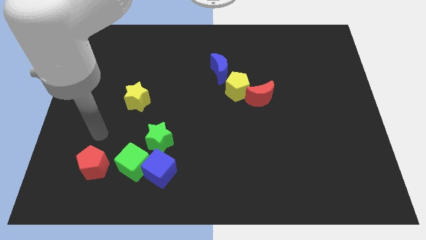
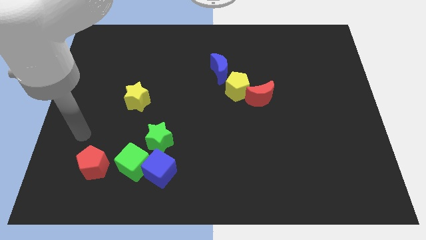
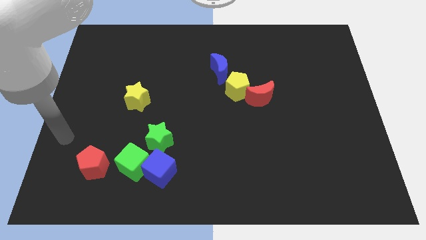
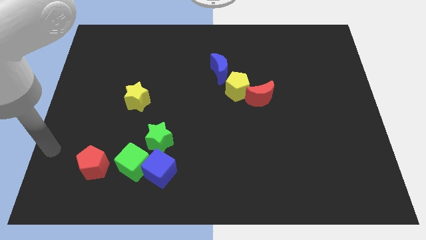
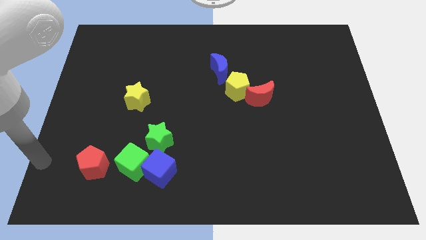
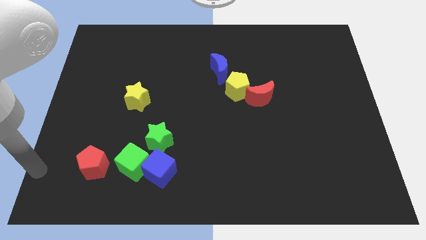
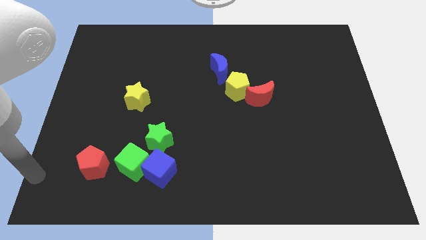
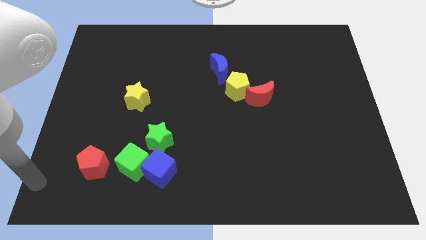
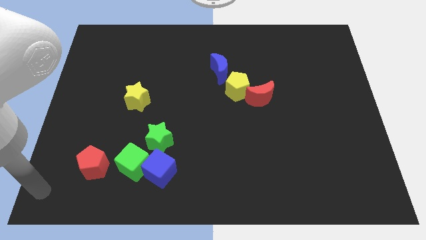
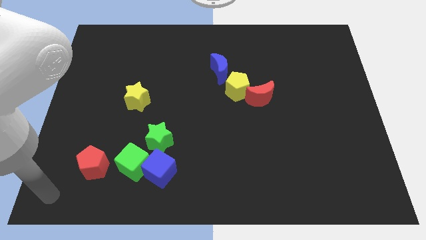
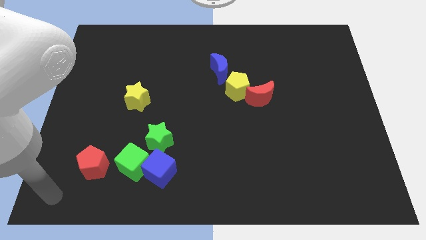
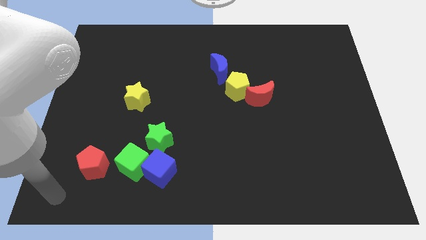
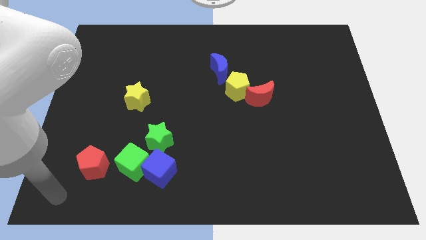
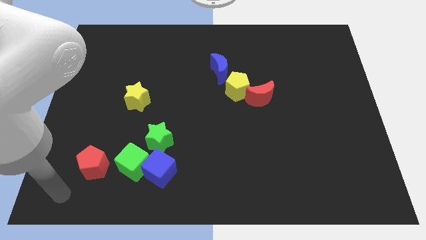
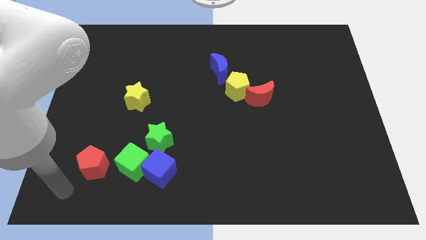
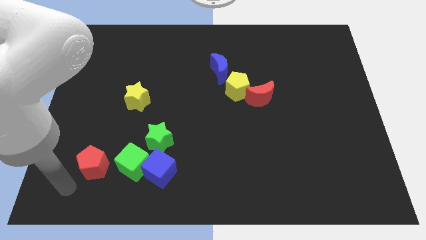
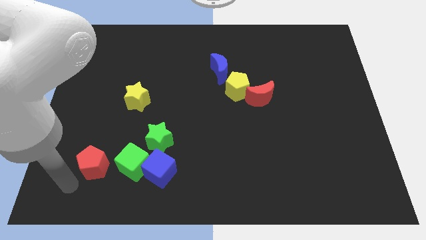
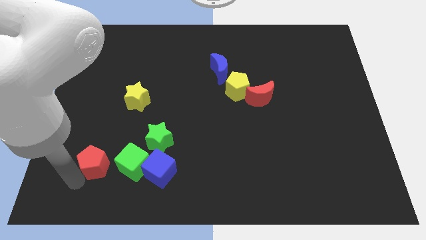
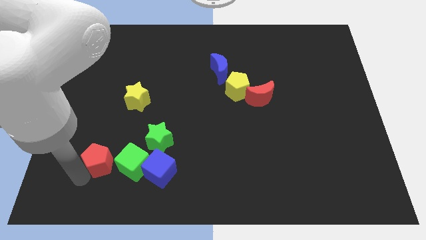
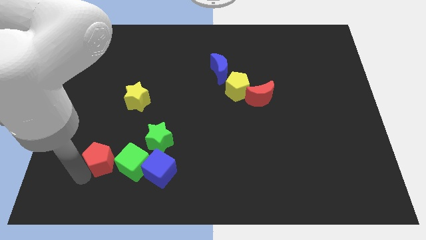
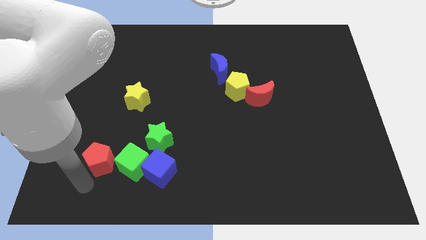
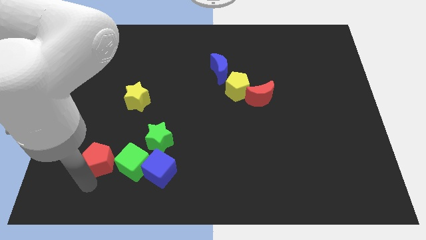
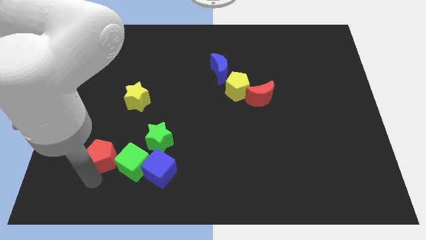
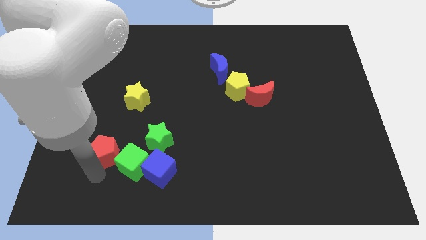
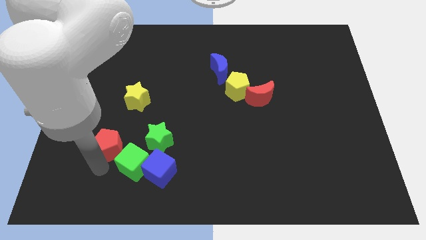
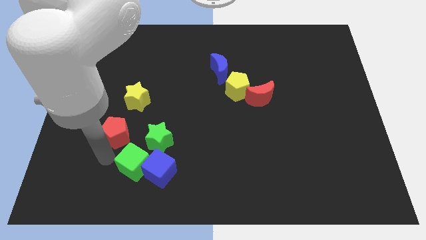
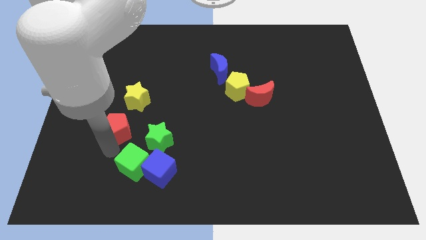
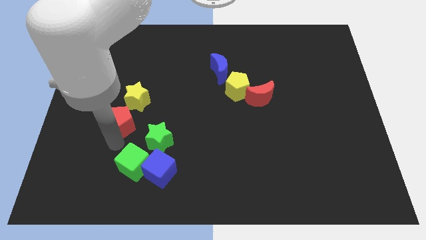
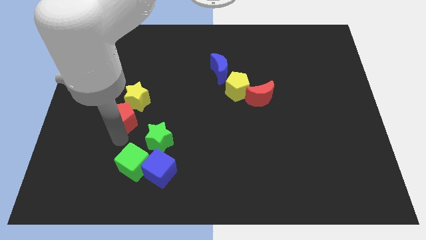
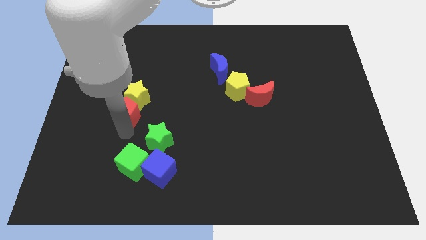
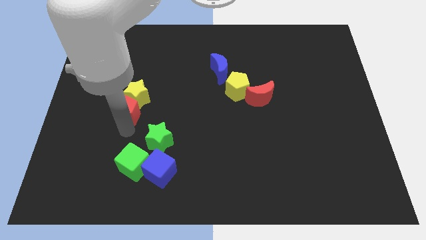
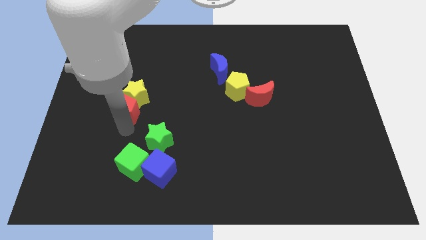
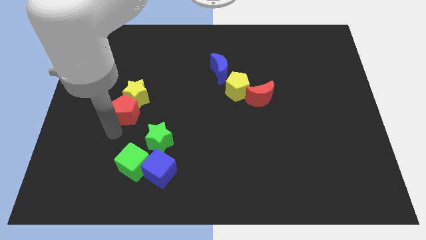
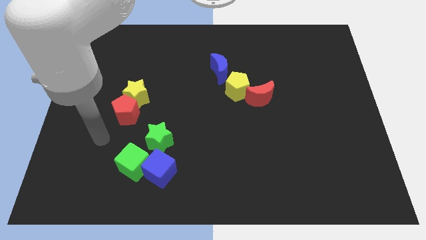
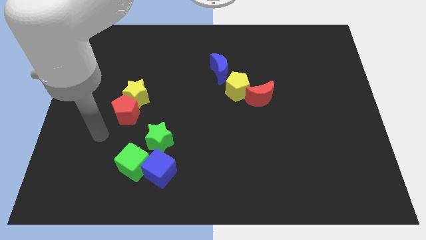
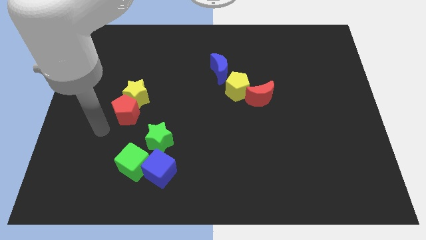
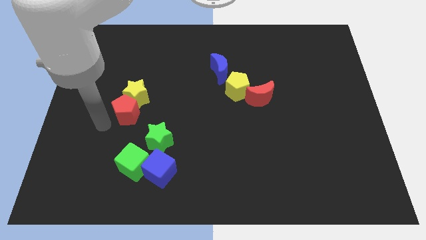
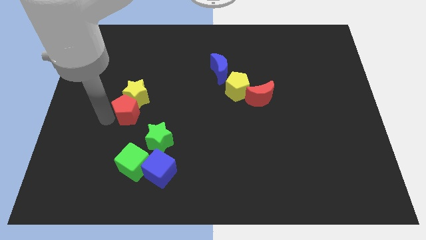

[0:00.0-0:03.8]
push red pentagon towards yellow star

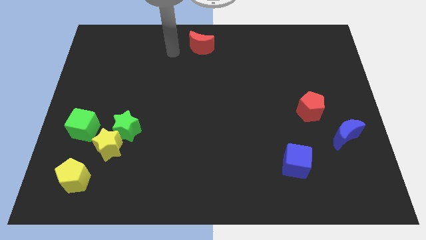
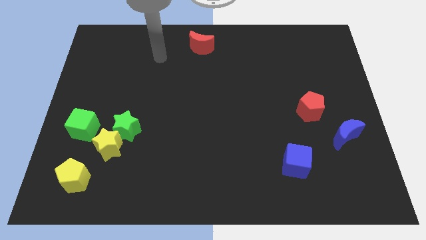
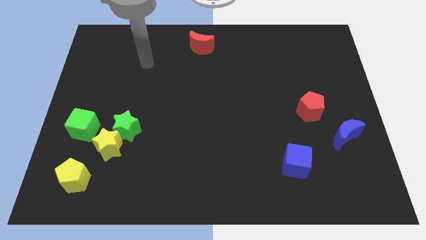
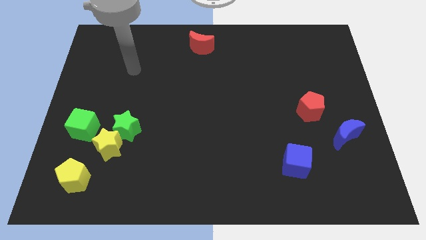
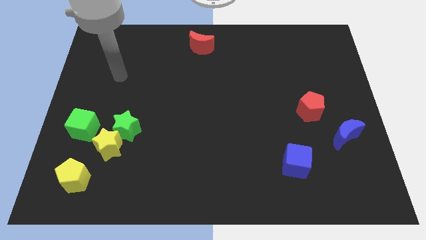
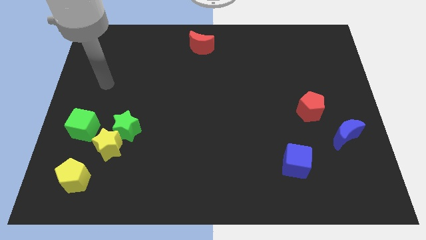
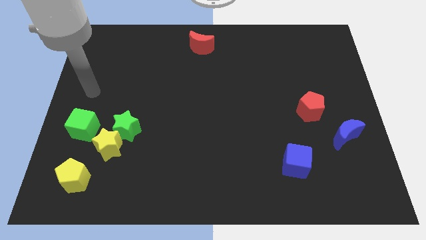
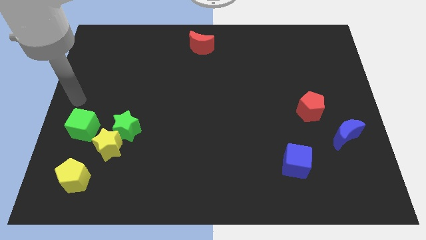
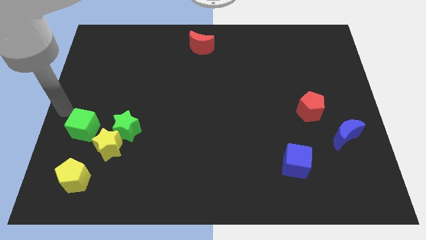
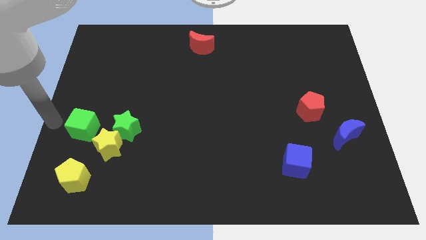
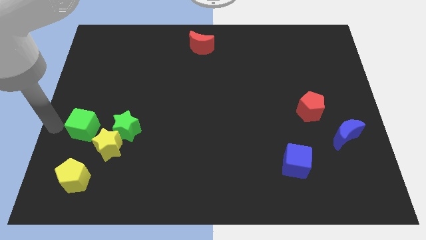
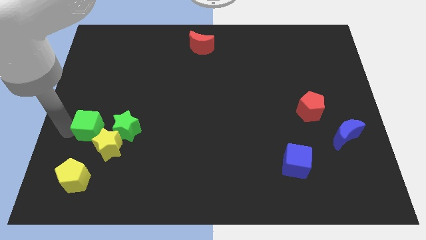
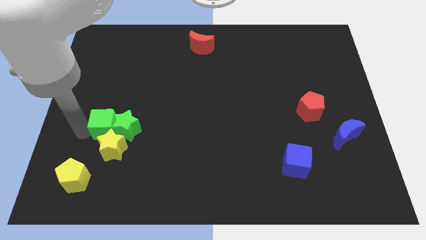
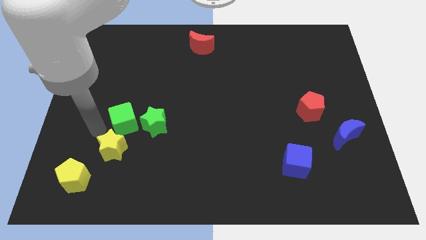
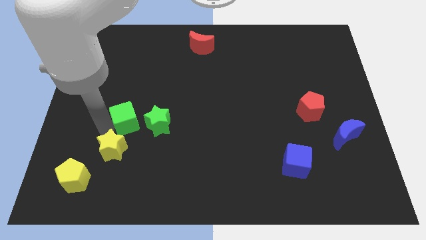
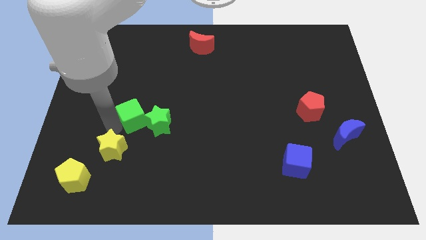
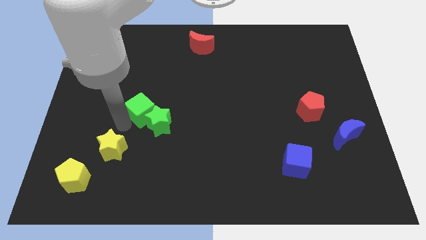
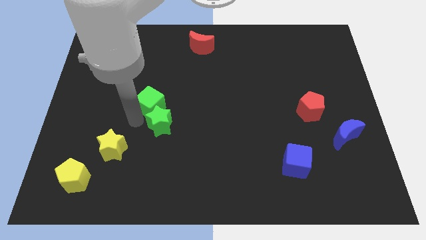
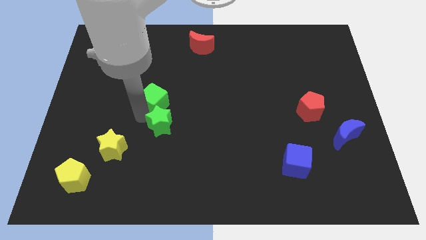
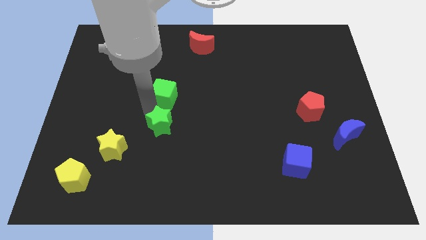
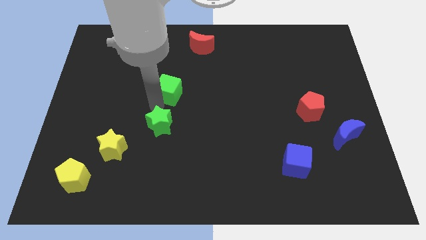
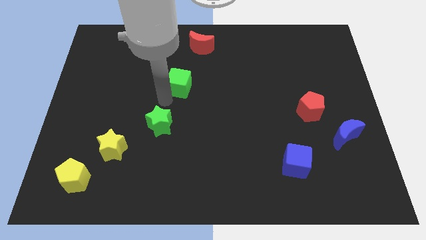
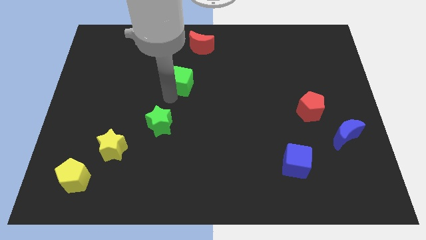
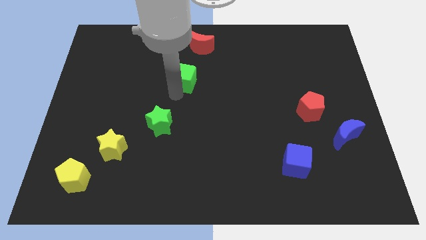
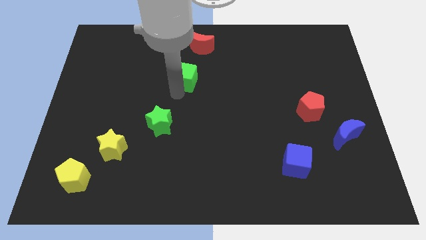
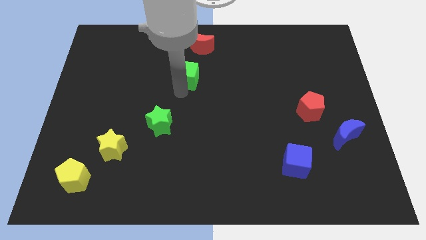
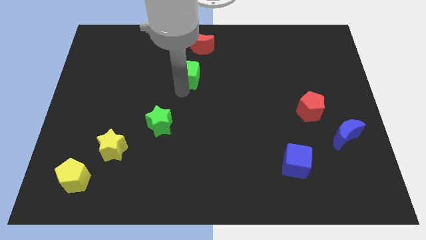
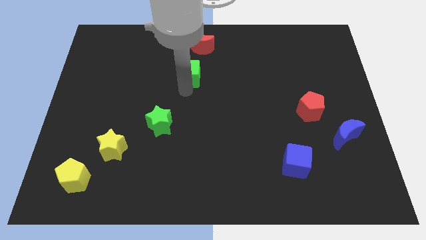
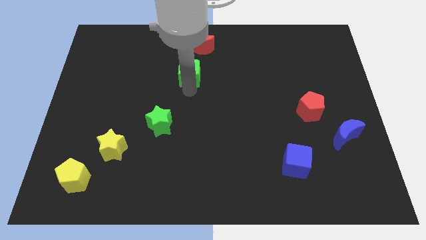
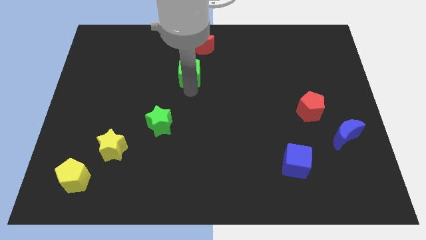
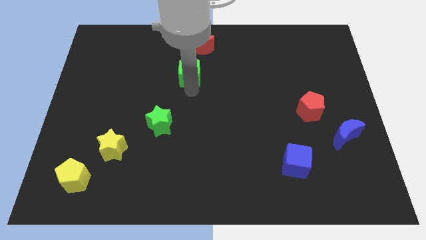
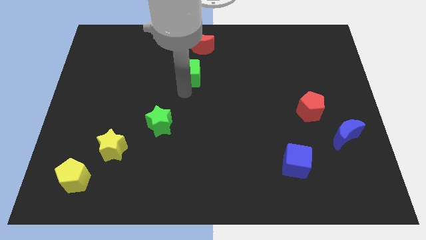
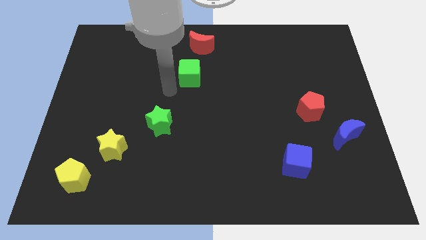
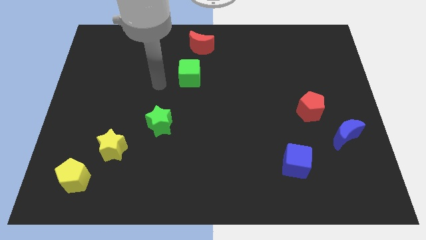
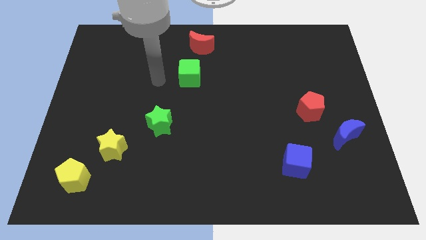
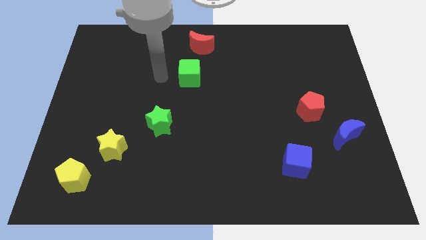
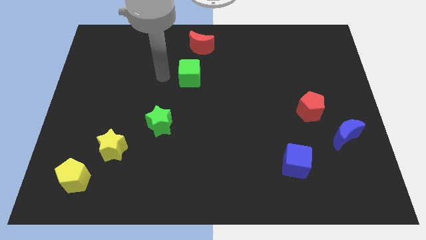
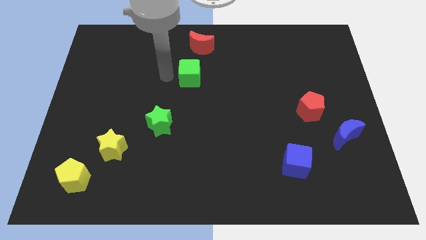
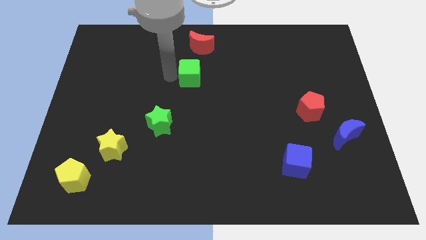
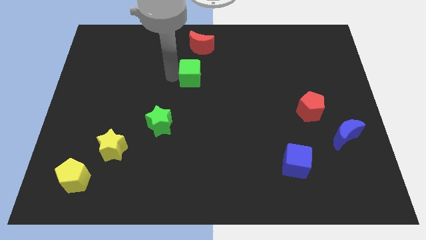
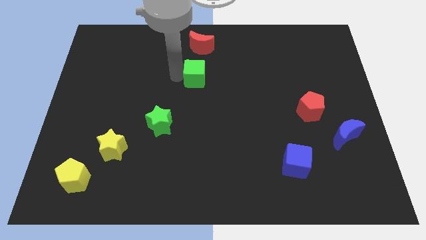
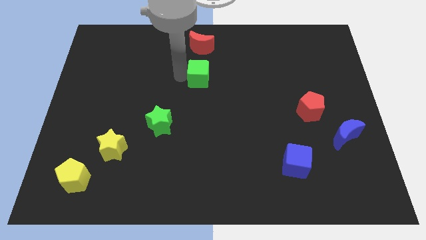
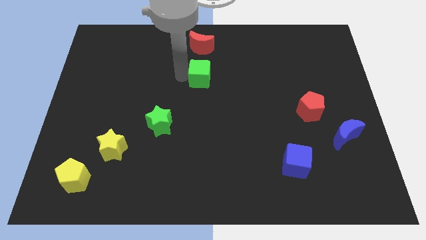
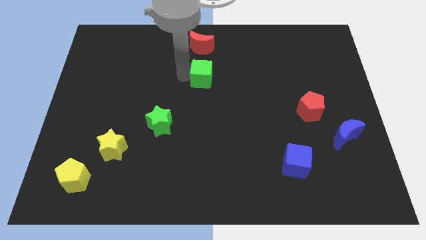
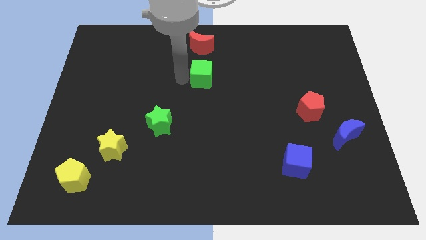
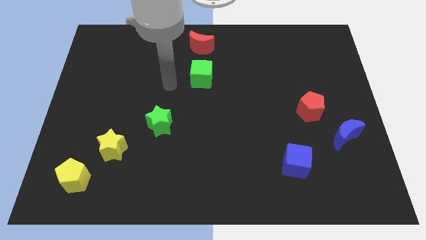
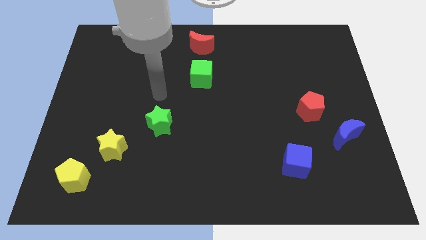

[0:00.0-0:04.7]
place the green cube below the red crescent

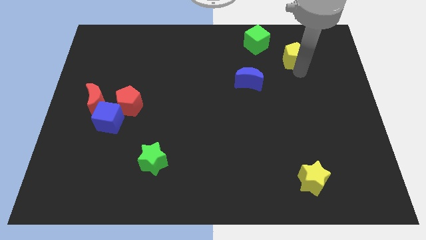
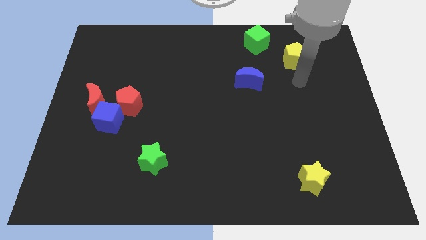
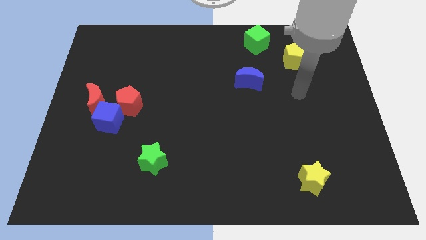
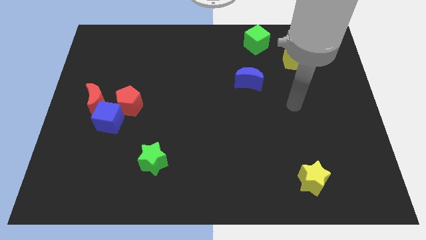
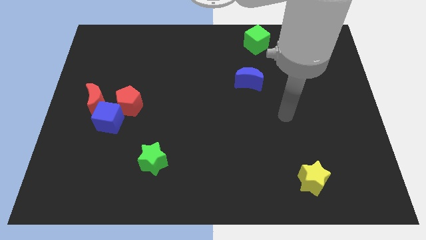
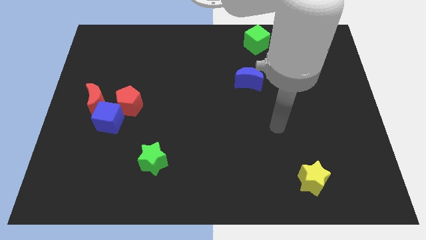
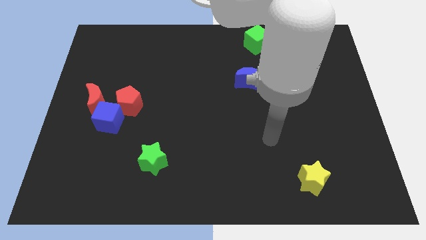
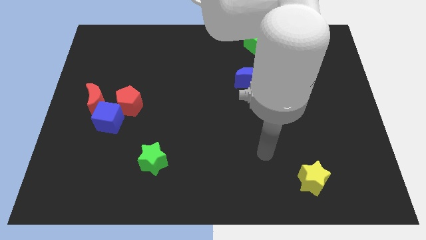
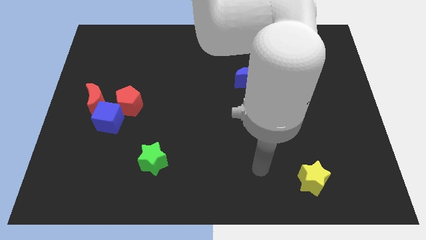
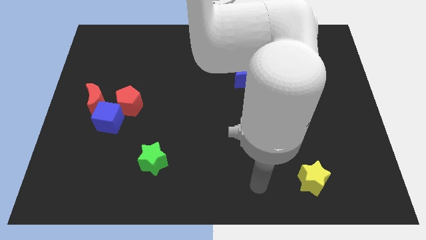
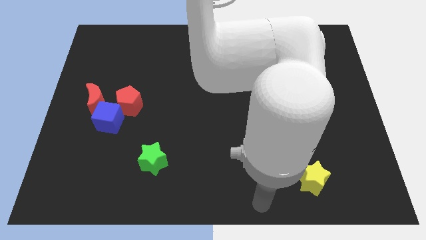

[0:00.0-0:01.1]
move your arm away from yellow pentagon
